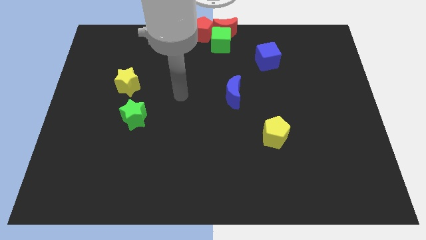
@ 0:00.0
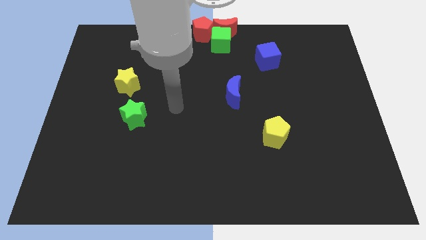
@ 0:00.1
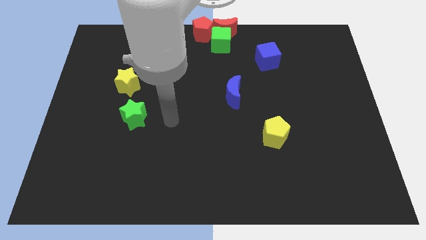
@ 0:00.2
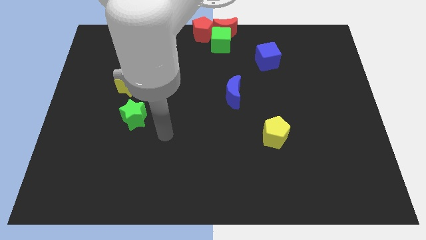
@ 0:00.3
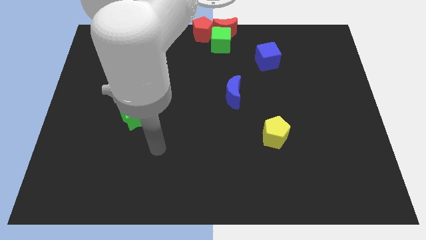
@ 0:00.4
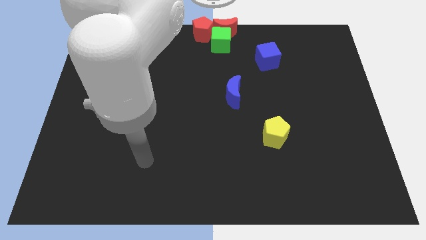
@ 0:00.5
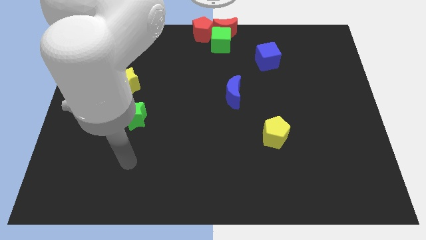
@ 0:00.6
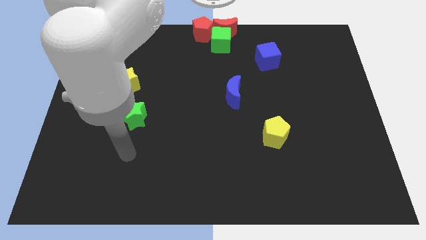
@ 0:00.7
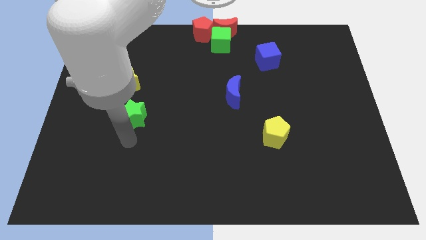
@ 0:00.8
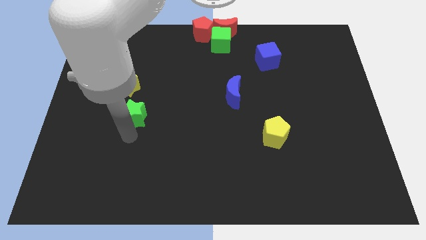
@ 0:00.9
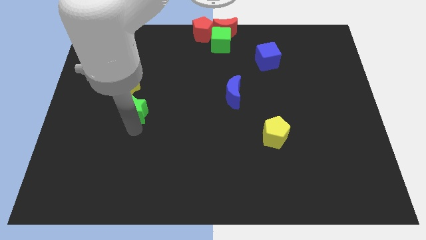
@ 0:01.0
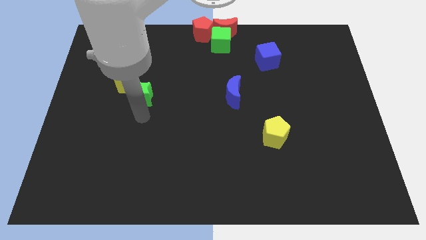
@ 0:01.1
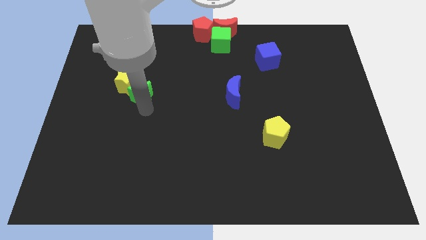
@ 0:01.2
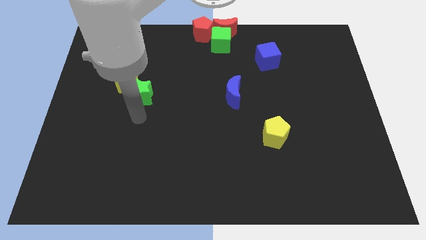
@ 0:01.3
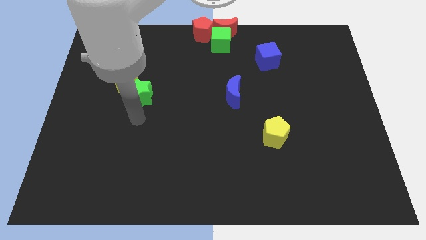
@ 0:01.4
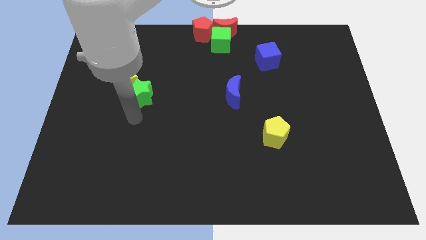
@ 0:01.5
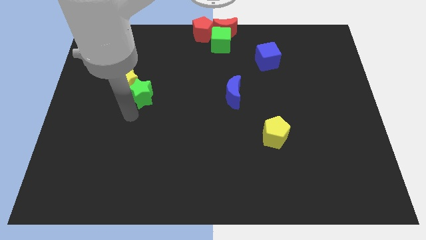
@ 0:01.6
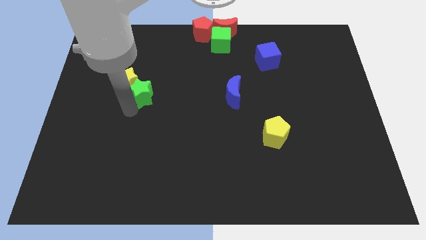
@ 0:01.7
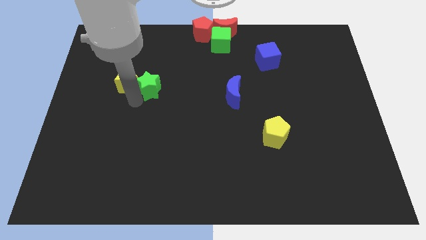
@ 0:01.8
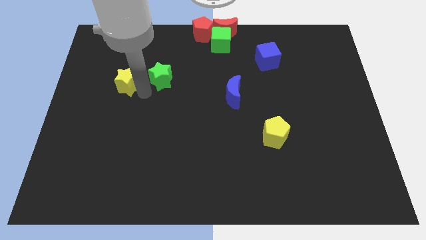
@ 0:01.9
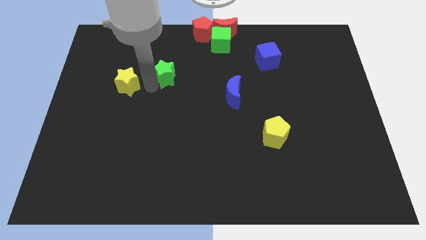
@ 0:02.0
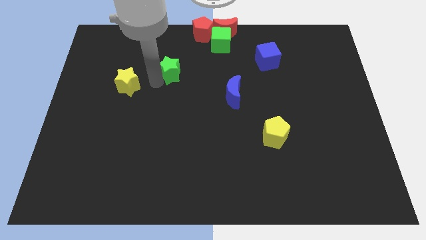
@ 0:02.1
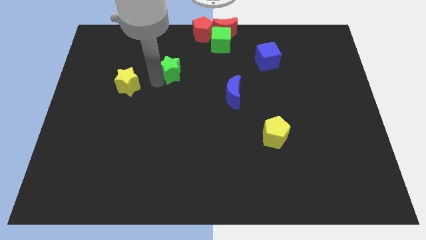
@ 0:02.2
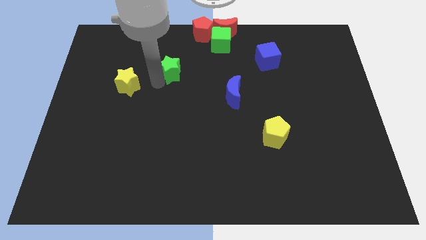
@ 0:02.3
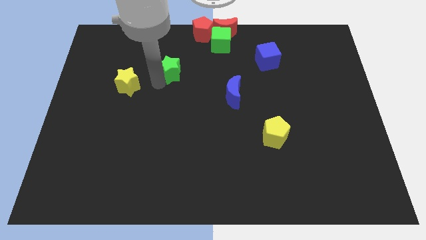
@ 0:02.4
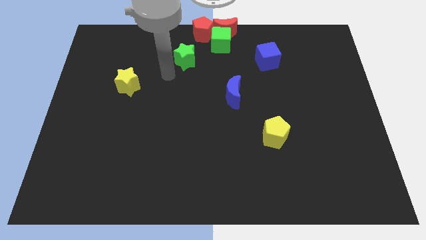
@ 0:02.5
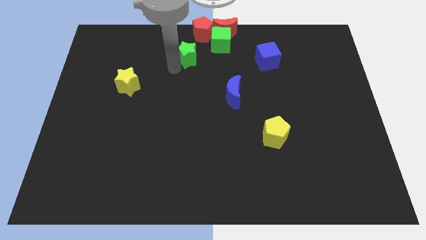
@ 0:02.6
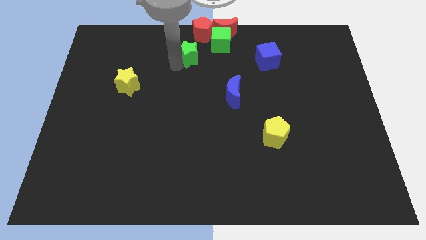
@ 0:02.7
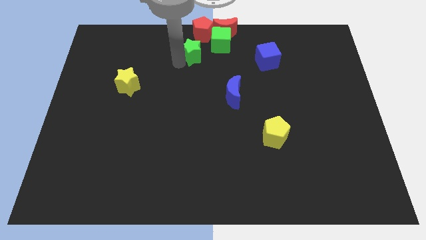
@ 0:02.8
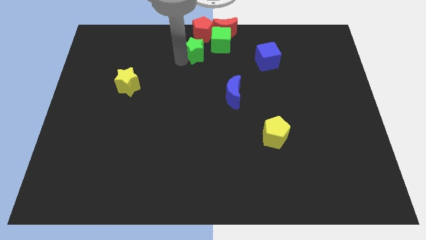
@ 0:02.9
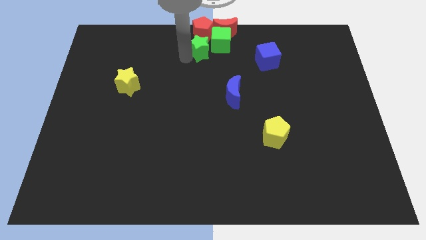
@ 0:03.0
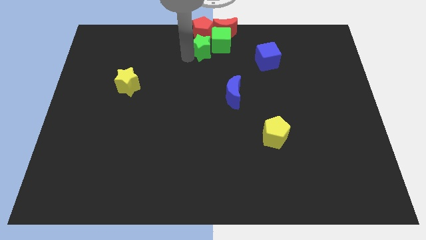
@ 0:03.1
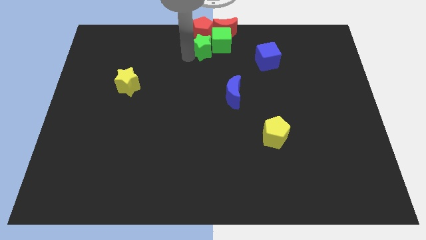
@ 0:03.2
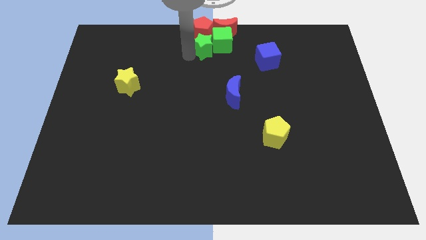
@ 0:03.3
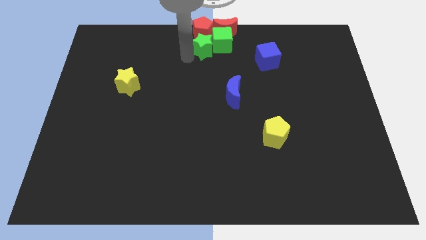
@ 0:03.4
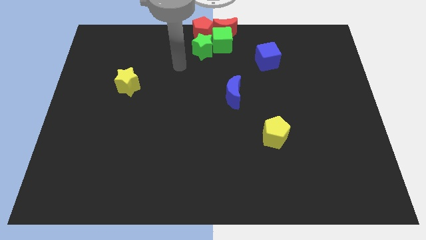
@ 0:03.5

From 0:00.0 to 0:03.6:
push green star into green cube

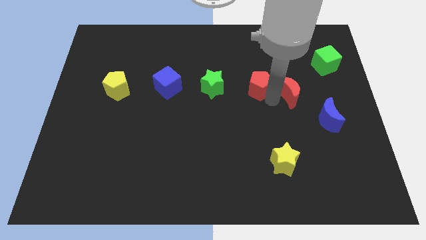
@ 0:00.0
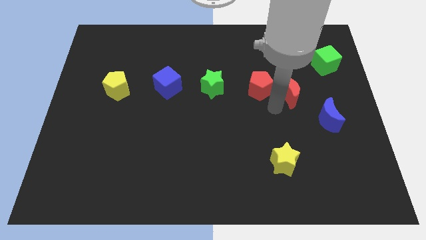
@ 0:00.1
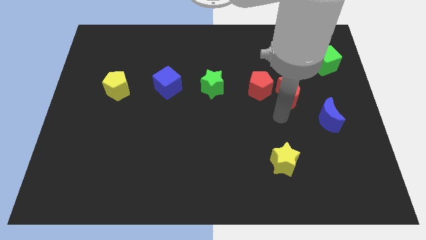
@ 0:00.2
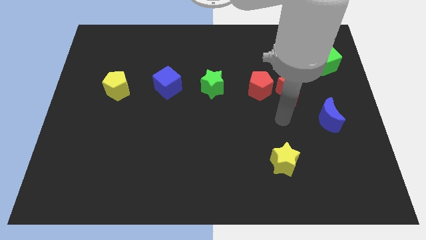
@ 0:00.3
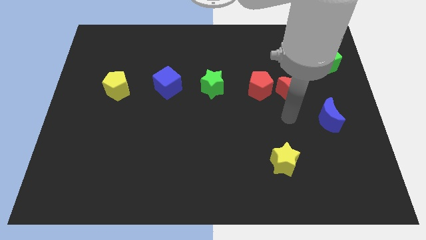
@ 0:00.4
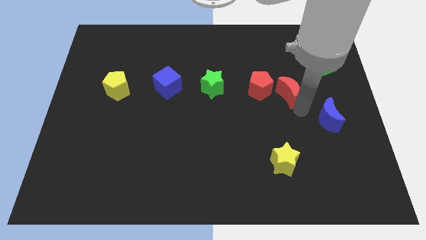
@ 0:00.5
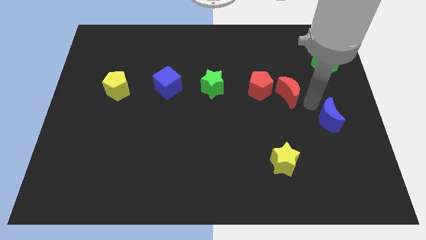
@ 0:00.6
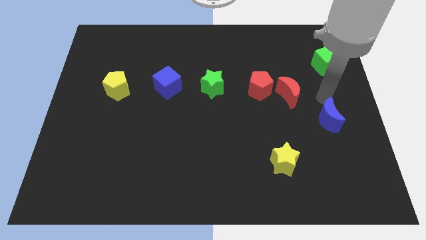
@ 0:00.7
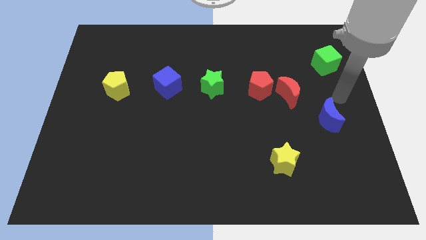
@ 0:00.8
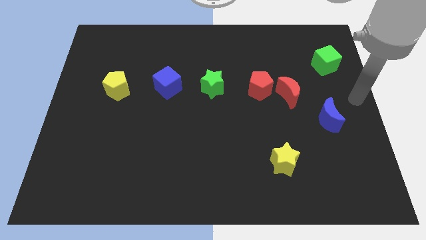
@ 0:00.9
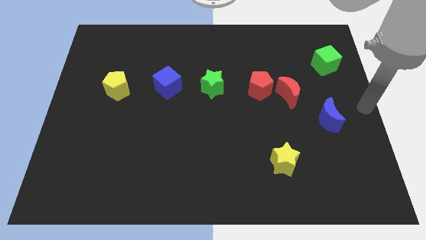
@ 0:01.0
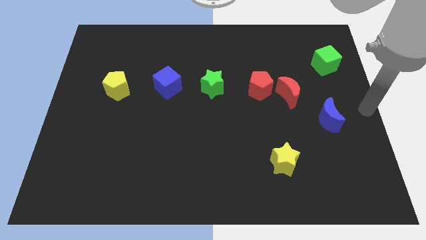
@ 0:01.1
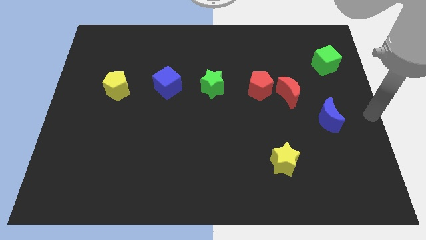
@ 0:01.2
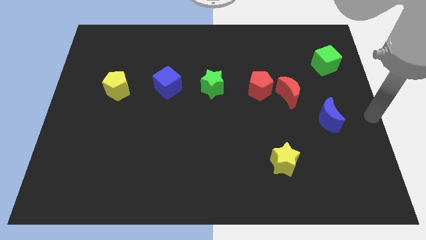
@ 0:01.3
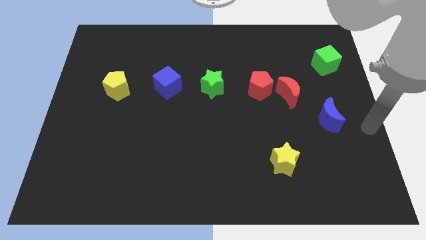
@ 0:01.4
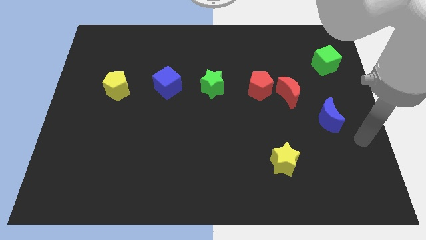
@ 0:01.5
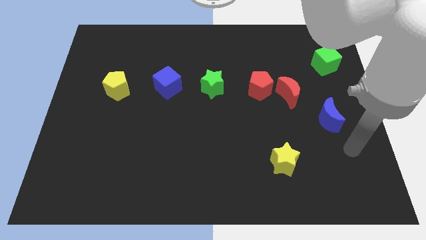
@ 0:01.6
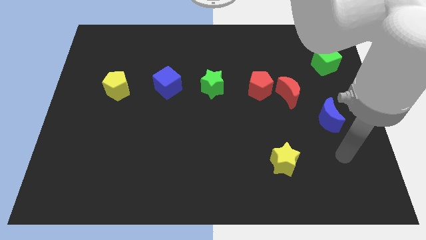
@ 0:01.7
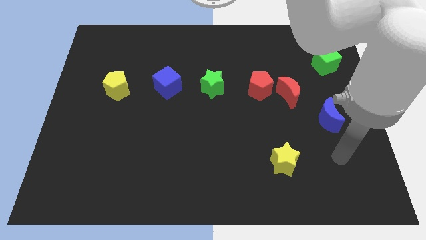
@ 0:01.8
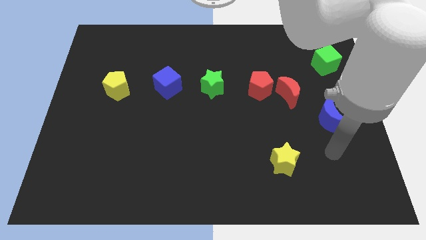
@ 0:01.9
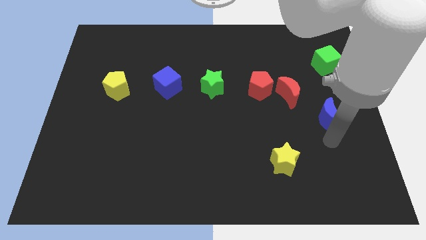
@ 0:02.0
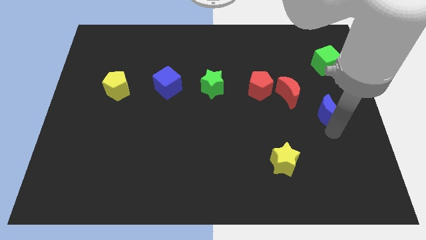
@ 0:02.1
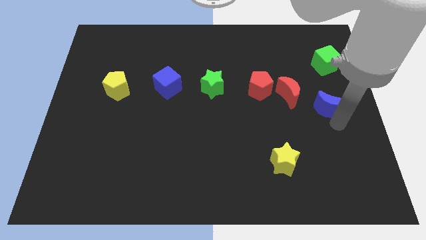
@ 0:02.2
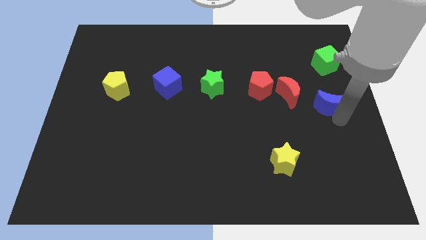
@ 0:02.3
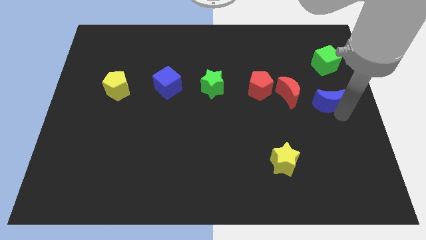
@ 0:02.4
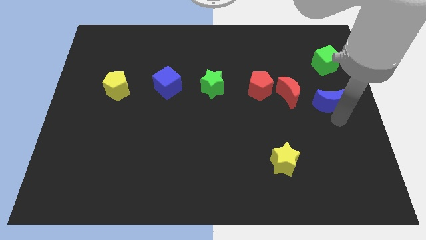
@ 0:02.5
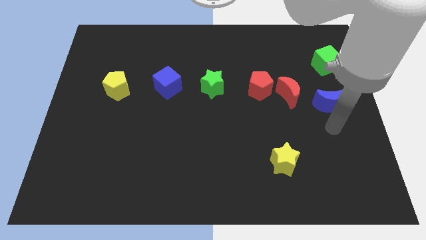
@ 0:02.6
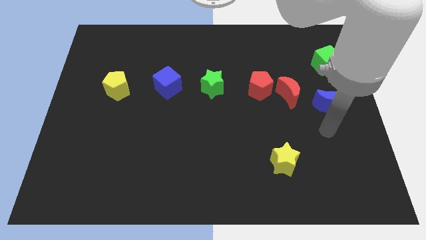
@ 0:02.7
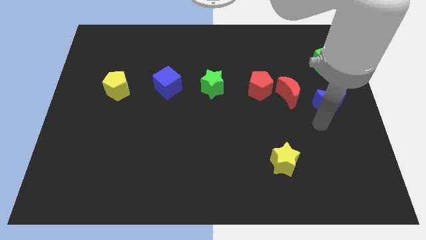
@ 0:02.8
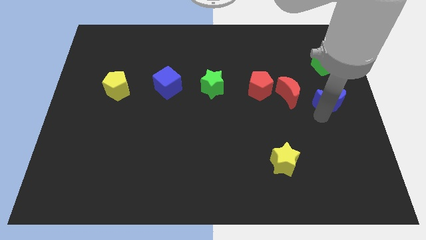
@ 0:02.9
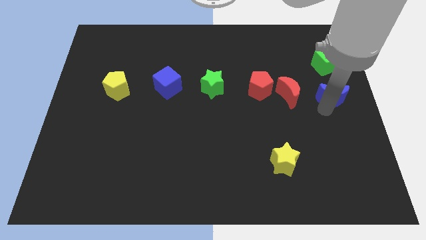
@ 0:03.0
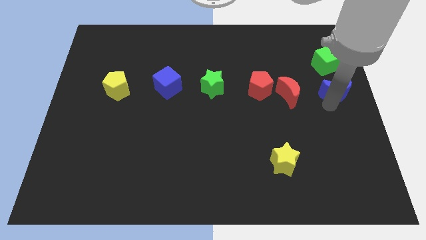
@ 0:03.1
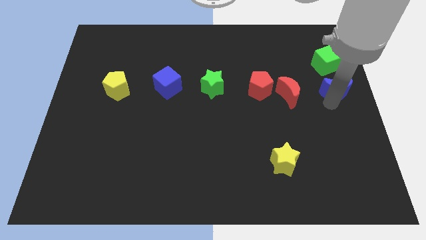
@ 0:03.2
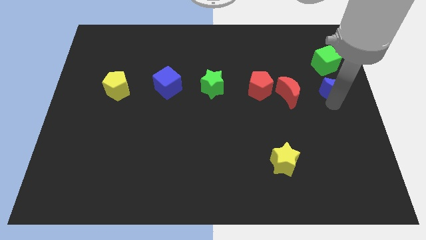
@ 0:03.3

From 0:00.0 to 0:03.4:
place the blue moon at the bottom of green cube

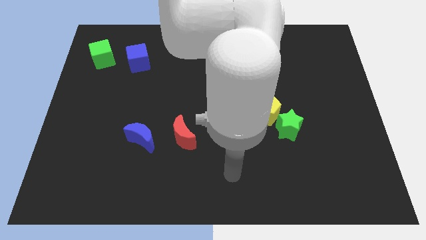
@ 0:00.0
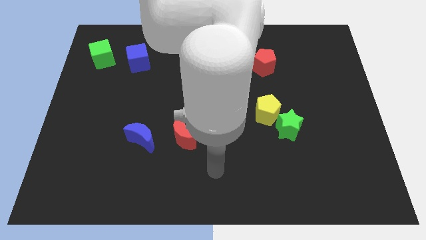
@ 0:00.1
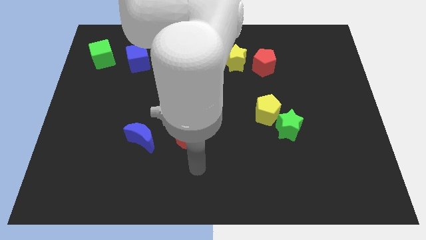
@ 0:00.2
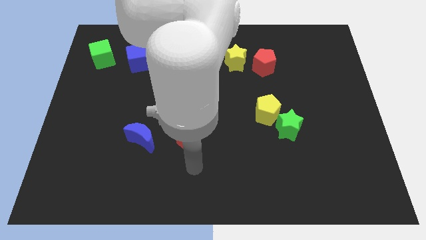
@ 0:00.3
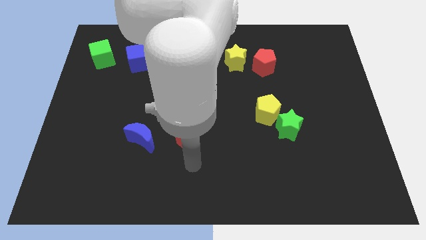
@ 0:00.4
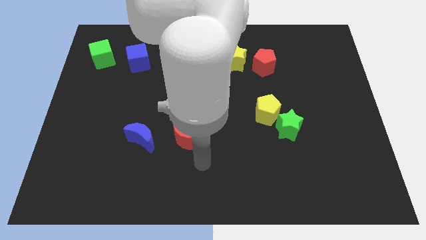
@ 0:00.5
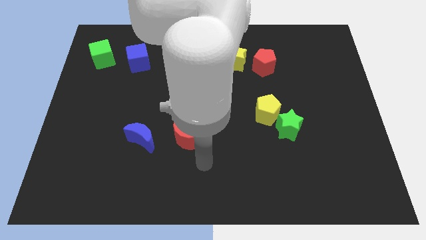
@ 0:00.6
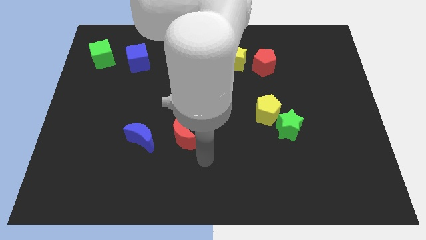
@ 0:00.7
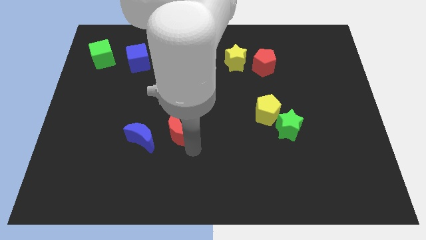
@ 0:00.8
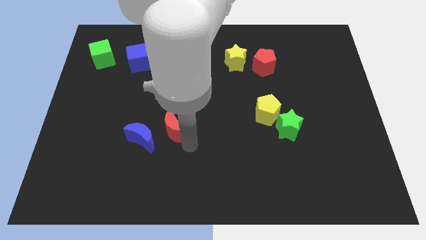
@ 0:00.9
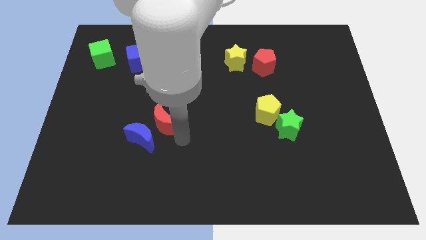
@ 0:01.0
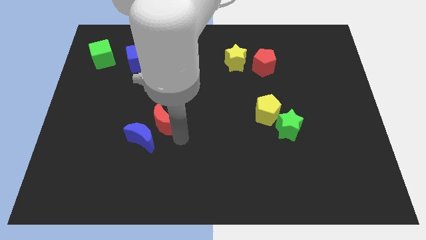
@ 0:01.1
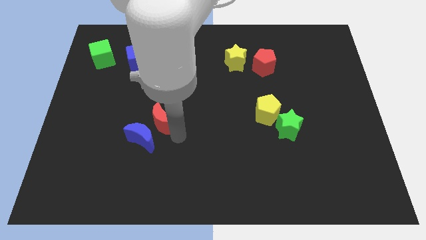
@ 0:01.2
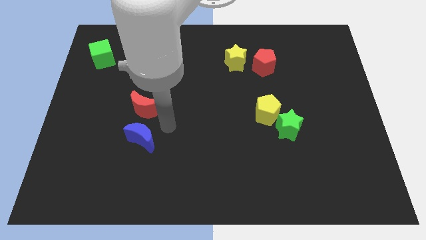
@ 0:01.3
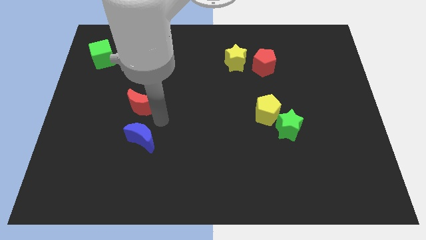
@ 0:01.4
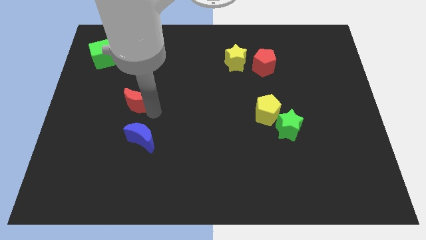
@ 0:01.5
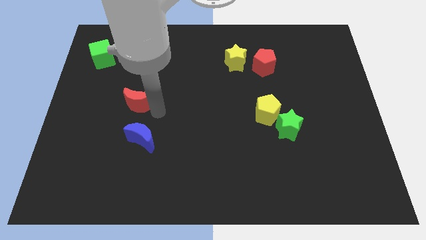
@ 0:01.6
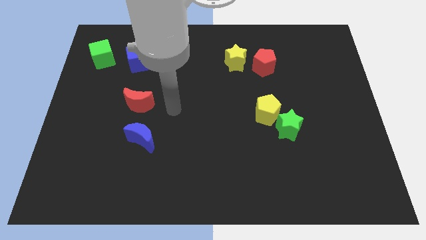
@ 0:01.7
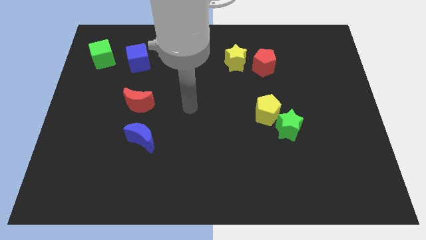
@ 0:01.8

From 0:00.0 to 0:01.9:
push the red crescent towards the top of the blue crescent
